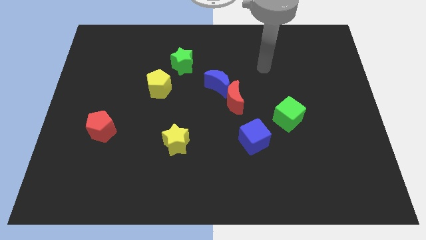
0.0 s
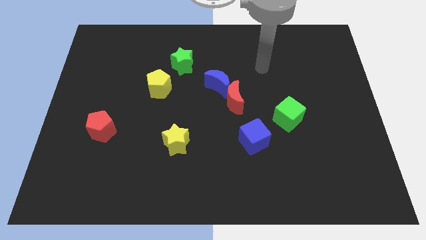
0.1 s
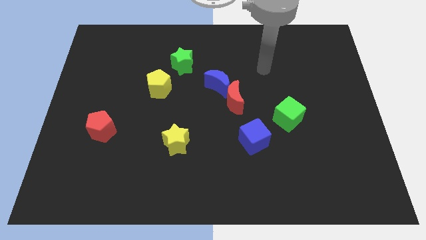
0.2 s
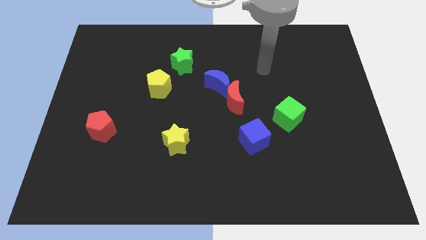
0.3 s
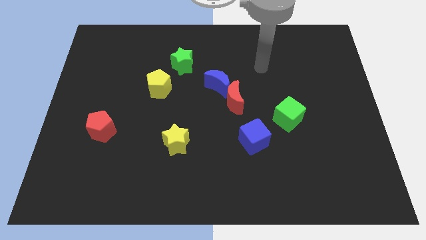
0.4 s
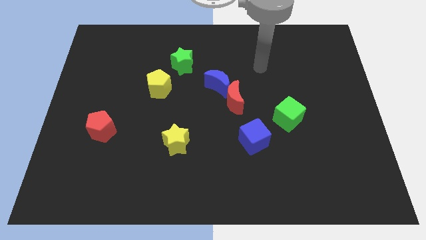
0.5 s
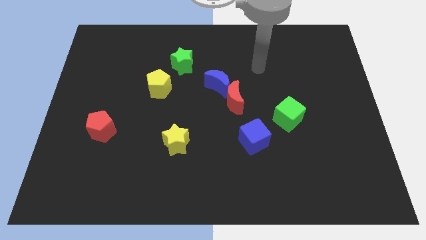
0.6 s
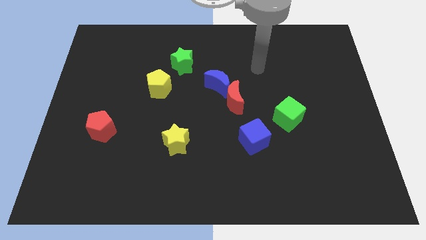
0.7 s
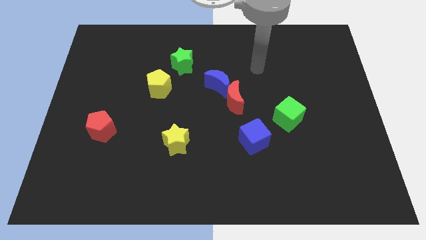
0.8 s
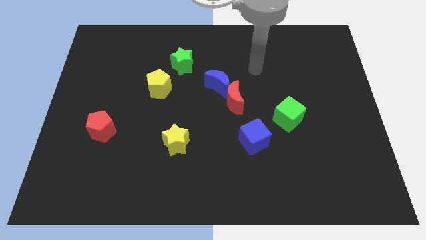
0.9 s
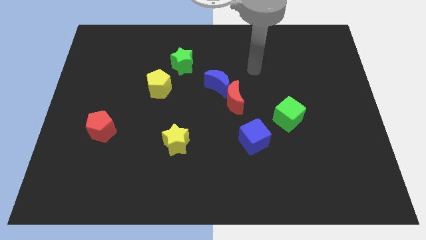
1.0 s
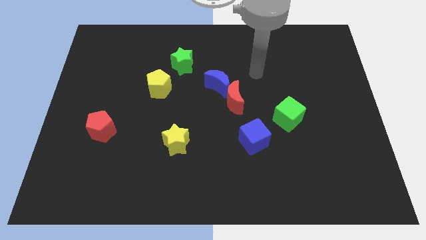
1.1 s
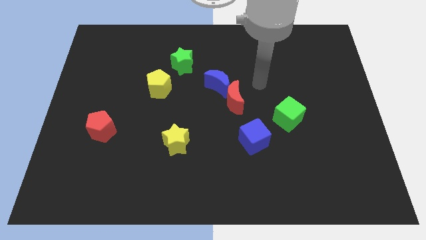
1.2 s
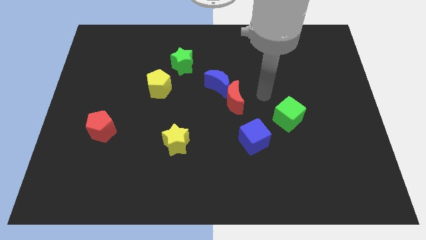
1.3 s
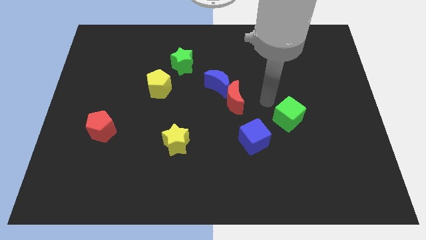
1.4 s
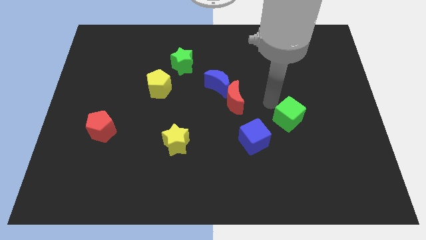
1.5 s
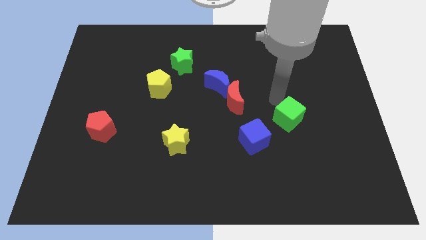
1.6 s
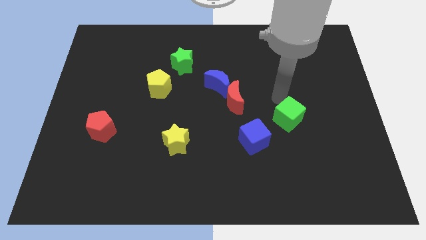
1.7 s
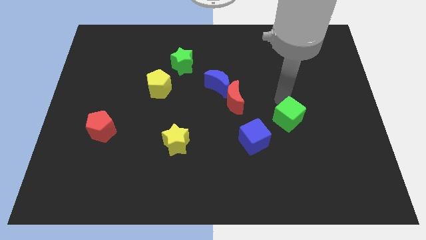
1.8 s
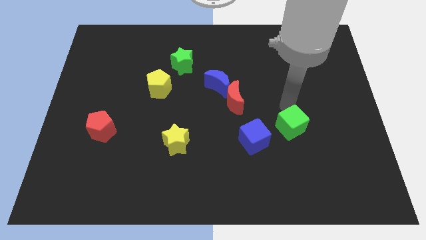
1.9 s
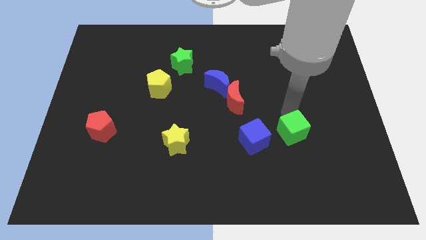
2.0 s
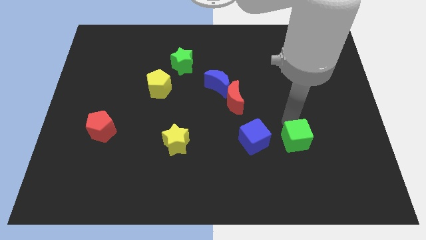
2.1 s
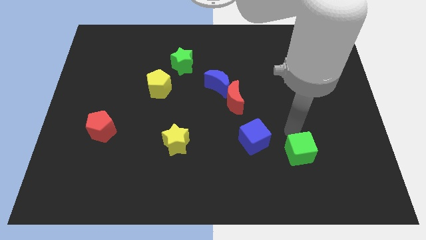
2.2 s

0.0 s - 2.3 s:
push the green cube to the right of the blue cube

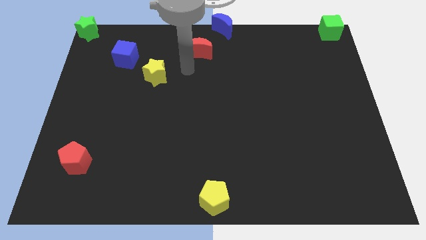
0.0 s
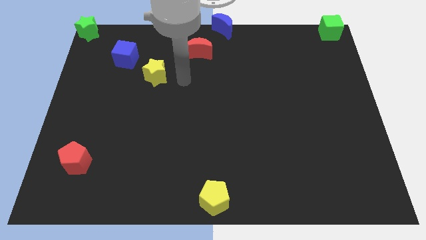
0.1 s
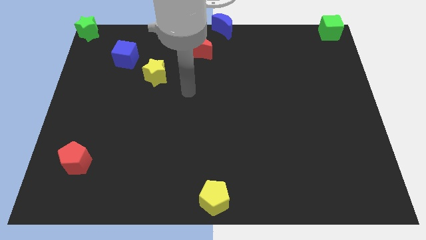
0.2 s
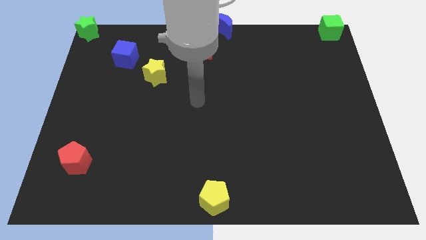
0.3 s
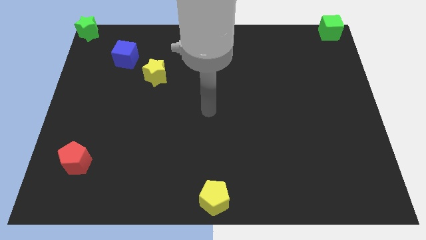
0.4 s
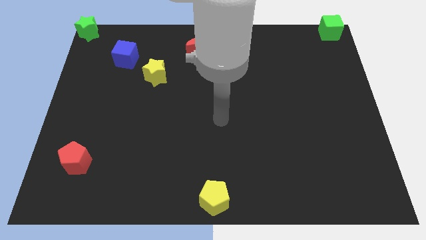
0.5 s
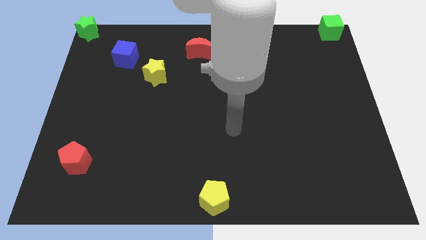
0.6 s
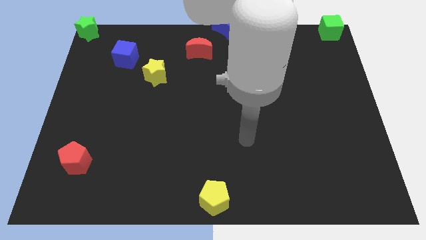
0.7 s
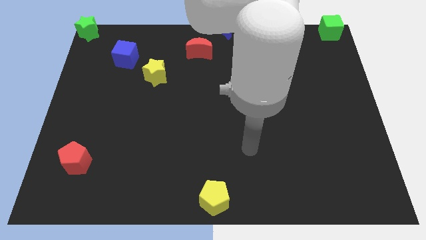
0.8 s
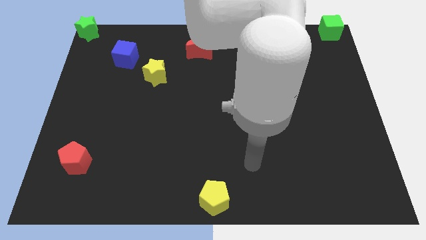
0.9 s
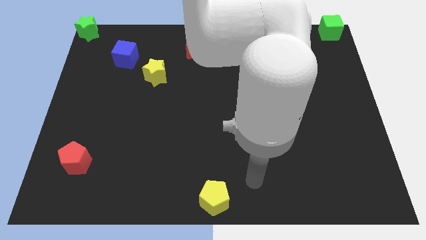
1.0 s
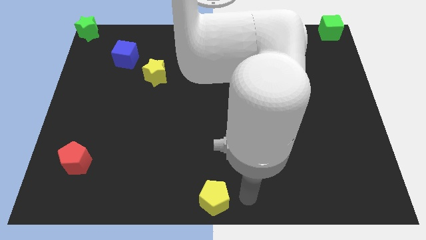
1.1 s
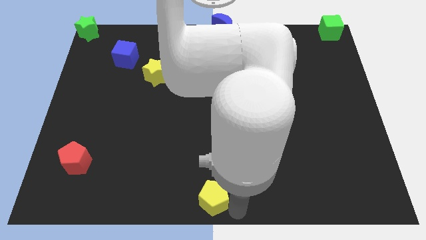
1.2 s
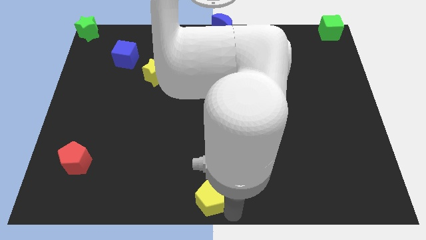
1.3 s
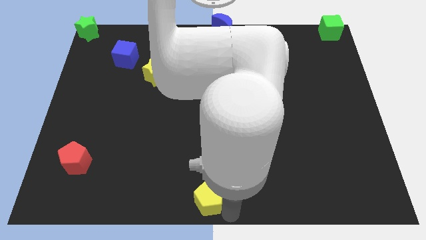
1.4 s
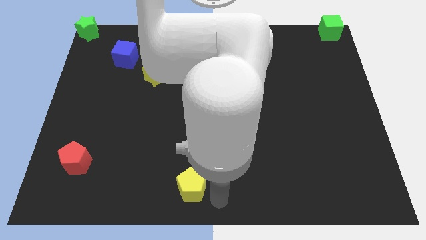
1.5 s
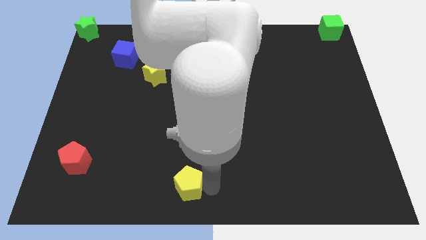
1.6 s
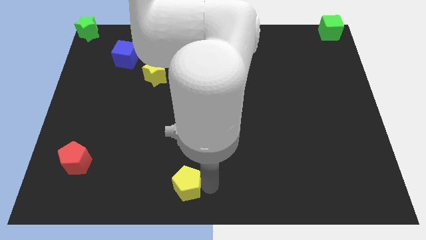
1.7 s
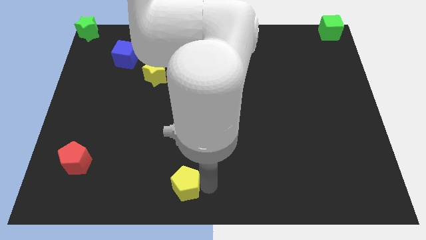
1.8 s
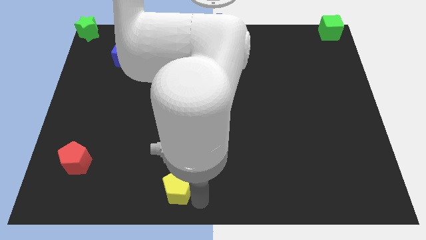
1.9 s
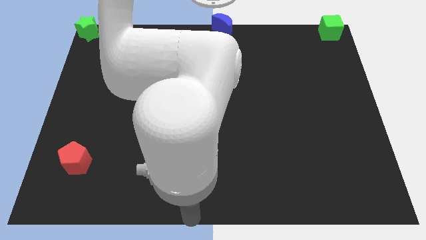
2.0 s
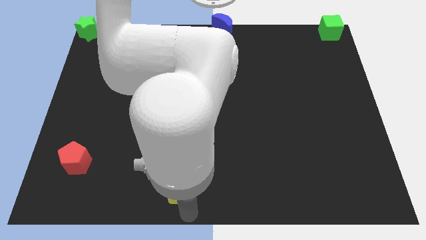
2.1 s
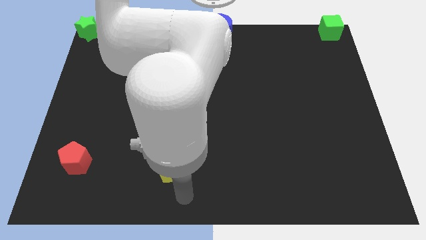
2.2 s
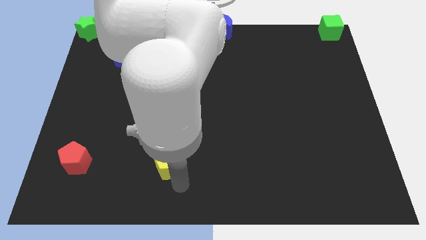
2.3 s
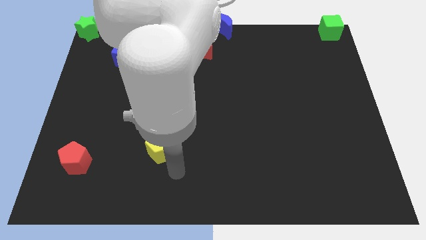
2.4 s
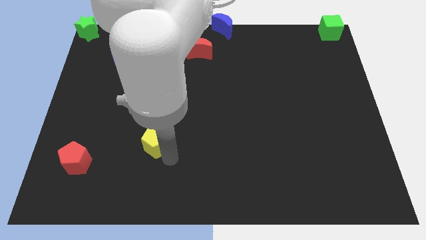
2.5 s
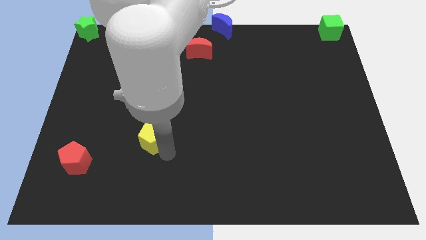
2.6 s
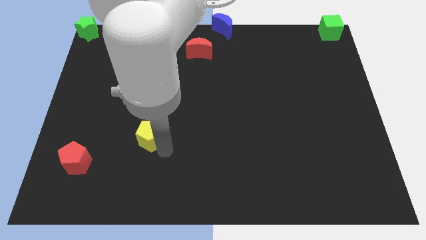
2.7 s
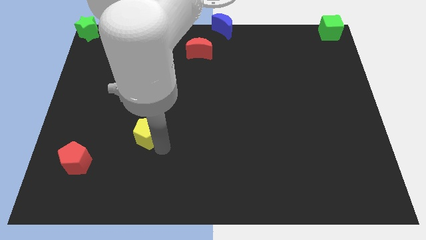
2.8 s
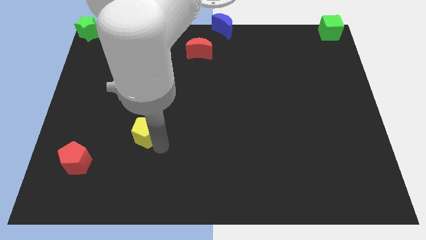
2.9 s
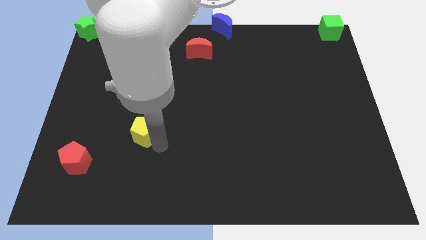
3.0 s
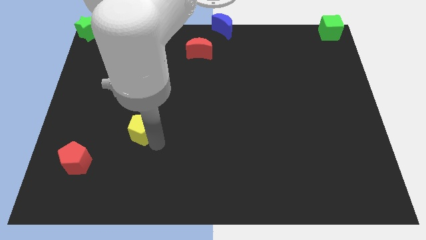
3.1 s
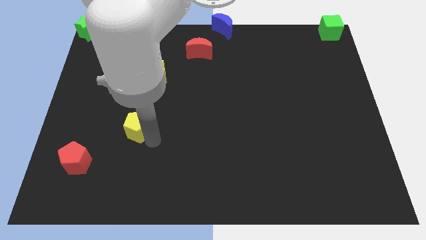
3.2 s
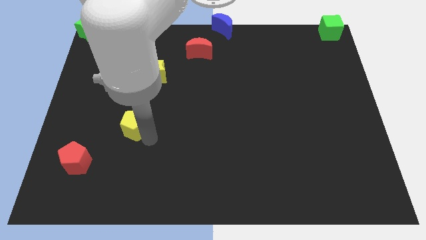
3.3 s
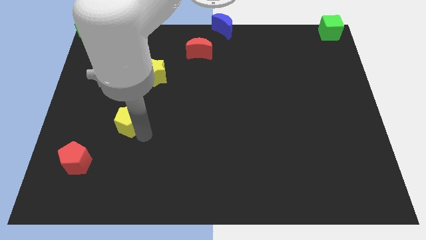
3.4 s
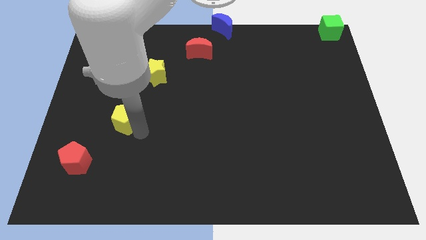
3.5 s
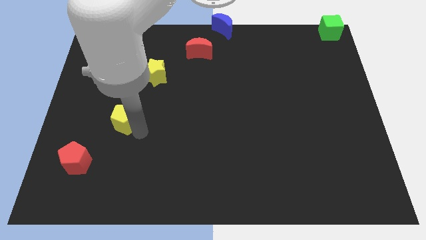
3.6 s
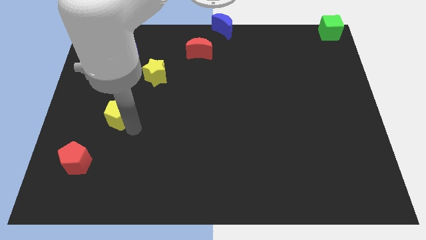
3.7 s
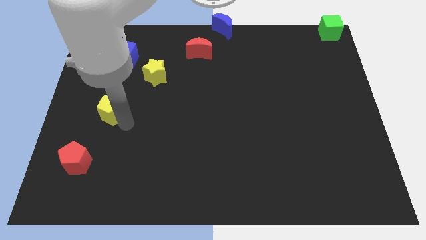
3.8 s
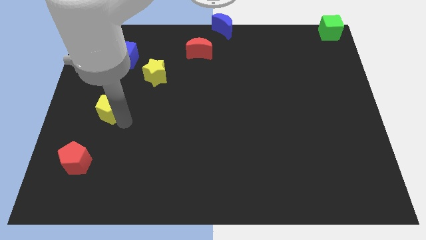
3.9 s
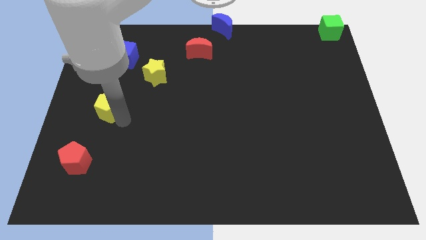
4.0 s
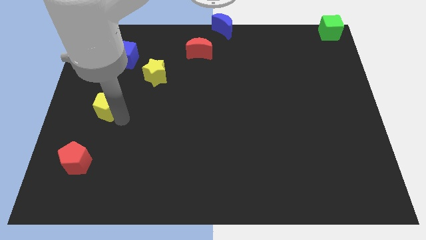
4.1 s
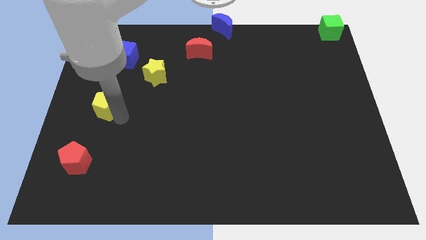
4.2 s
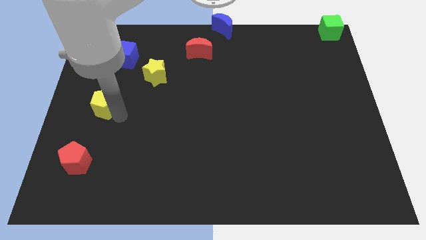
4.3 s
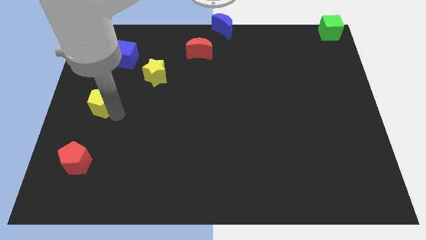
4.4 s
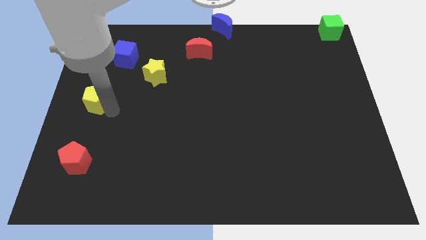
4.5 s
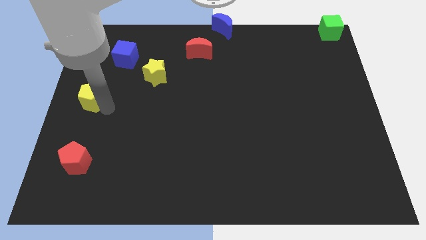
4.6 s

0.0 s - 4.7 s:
push the yellow pentagon in between red pentagon and blue cube

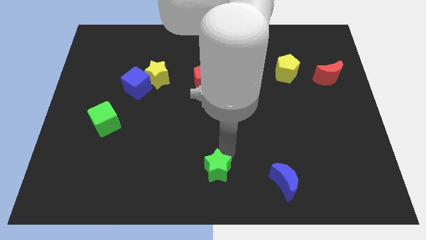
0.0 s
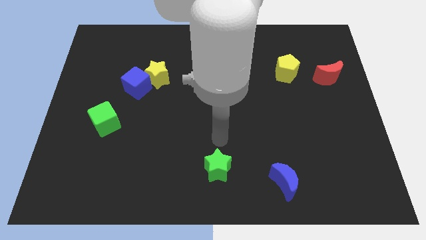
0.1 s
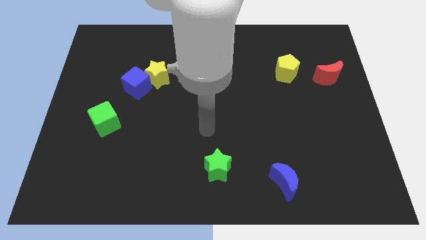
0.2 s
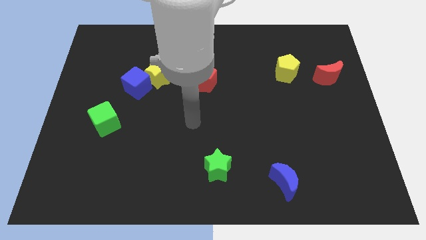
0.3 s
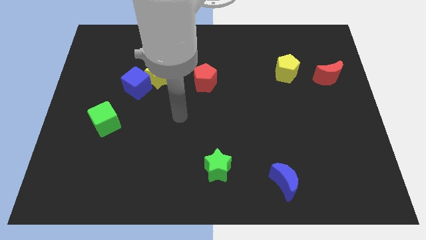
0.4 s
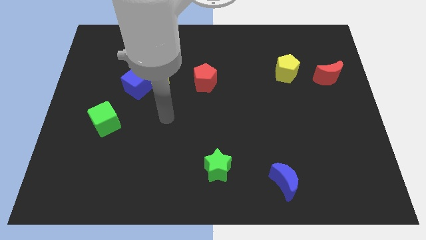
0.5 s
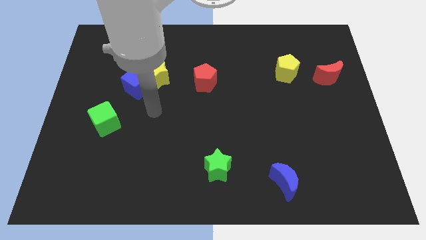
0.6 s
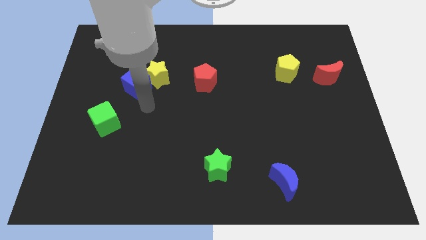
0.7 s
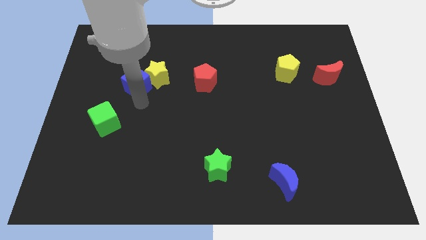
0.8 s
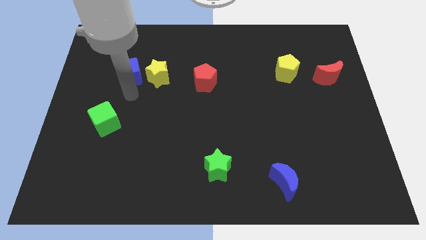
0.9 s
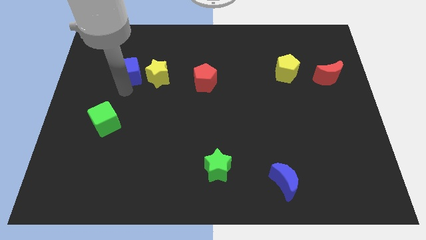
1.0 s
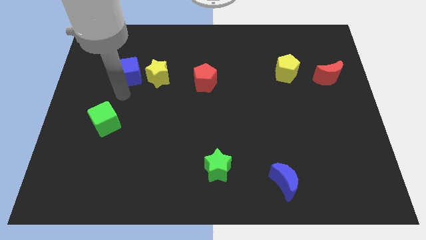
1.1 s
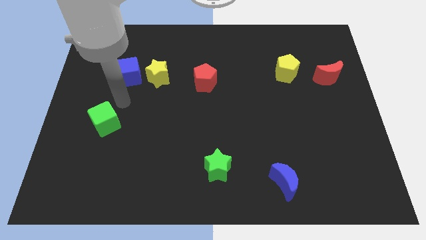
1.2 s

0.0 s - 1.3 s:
place the blue cube to the left side of yellow star

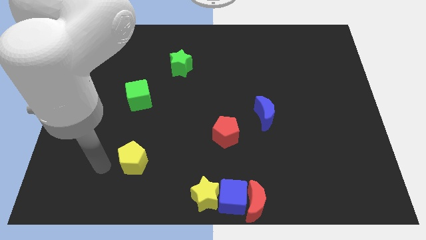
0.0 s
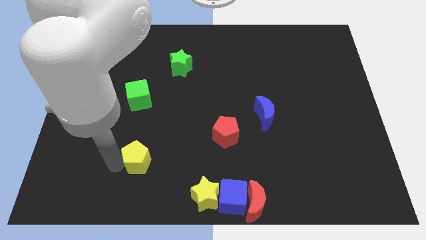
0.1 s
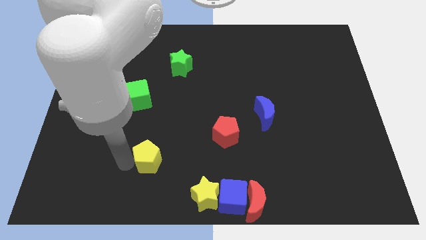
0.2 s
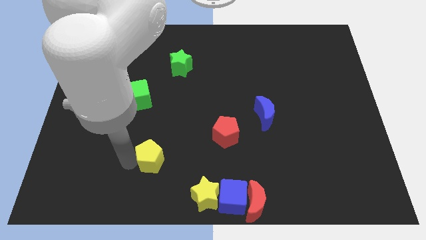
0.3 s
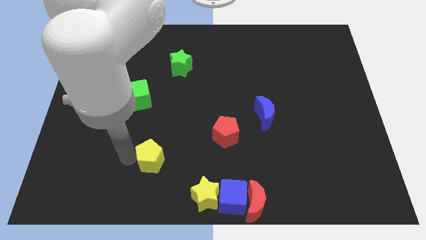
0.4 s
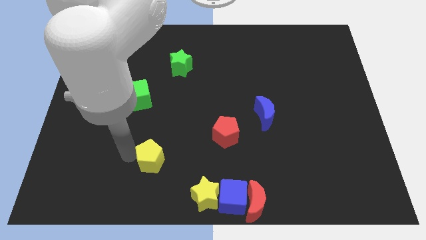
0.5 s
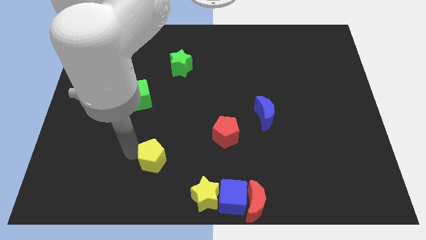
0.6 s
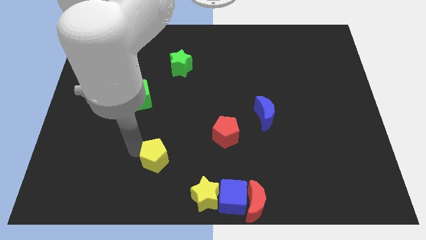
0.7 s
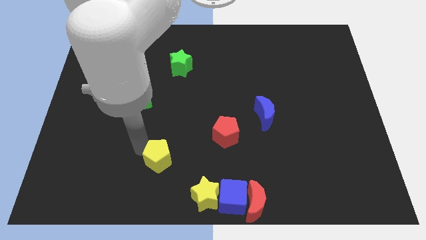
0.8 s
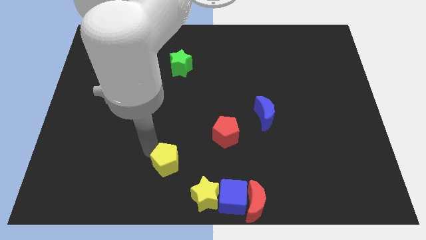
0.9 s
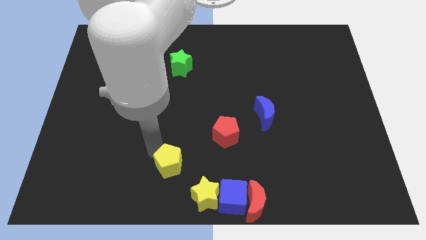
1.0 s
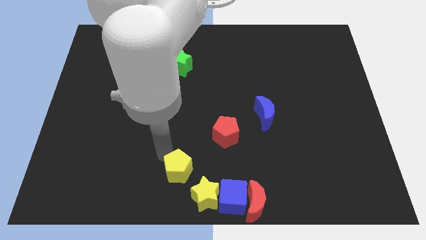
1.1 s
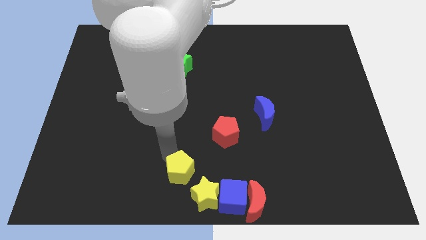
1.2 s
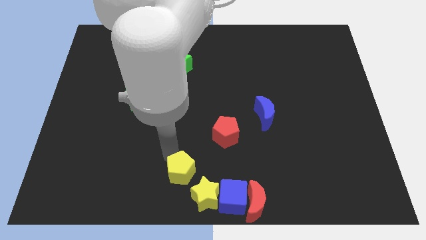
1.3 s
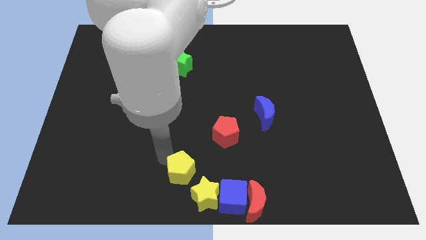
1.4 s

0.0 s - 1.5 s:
move yellow pentagon slightly towards yellow star
